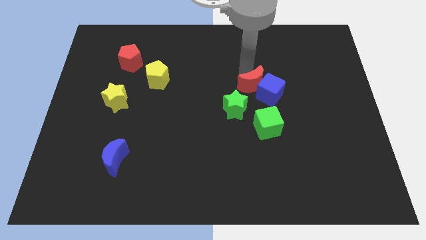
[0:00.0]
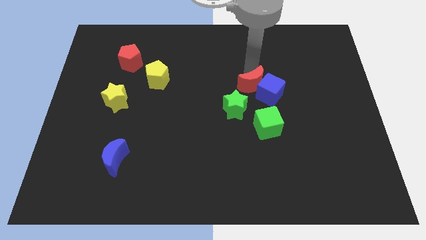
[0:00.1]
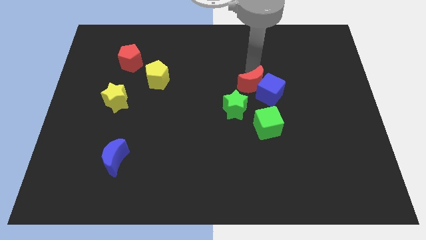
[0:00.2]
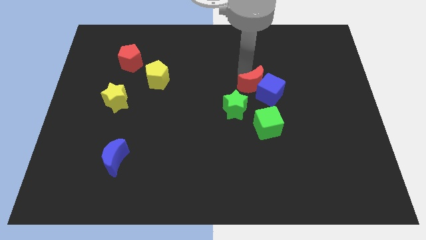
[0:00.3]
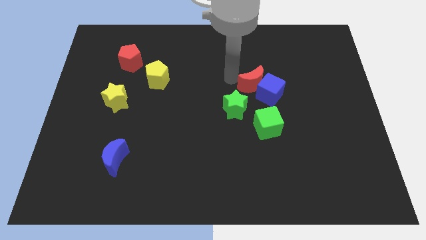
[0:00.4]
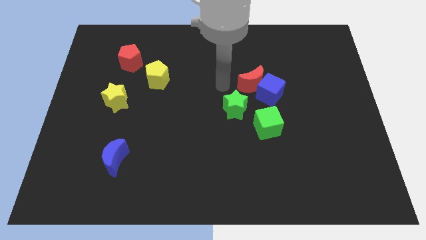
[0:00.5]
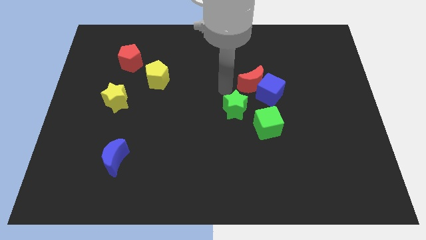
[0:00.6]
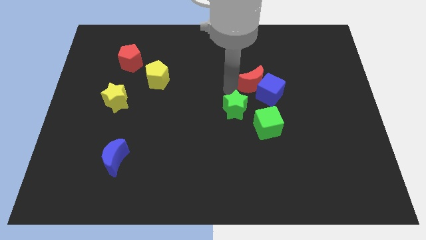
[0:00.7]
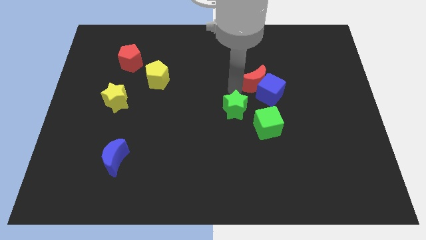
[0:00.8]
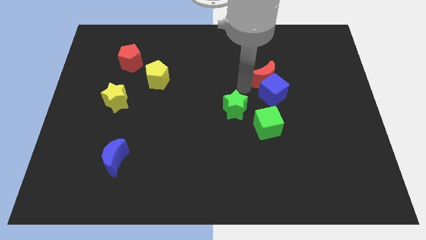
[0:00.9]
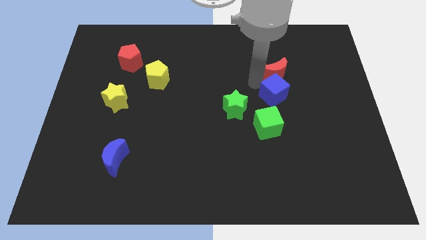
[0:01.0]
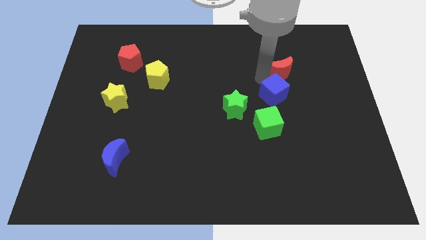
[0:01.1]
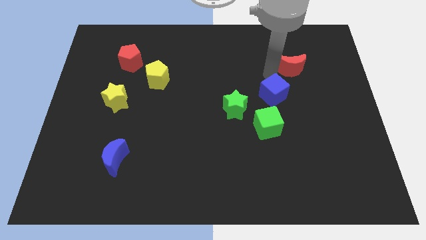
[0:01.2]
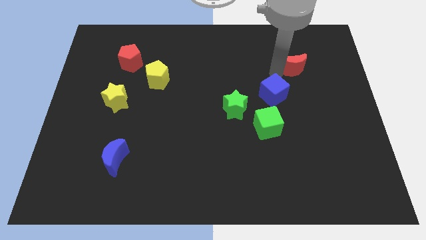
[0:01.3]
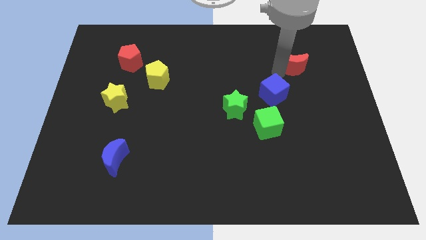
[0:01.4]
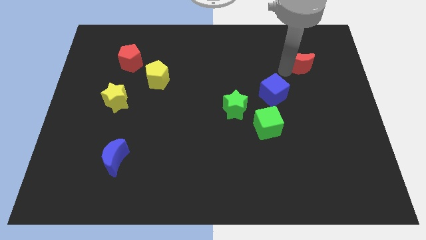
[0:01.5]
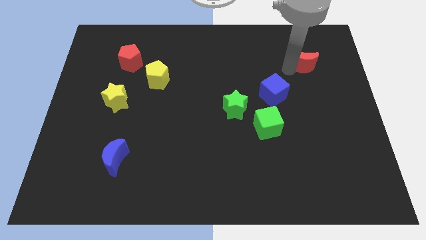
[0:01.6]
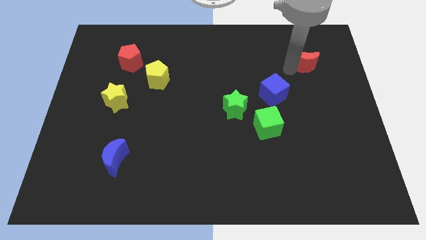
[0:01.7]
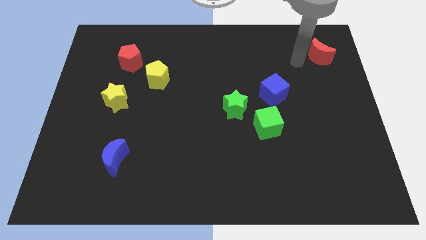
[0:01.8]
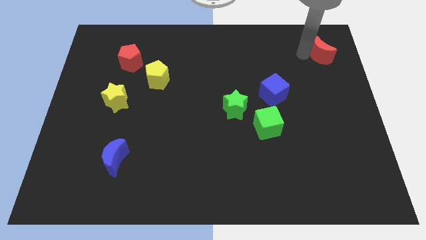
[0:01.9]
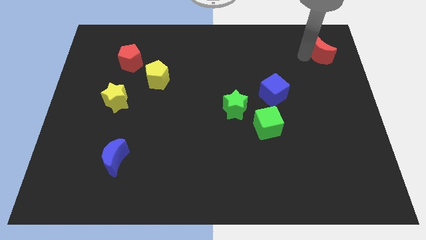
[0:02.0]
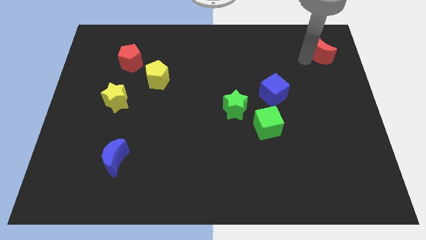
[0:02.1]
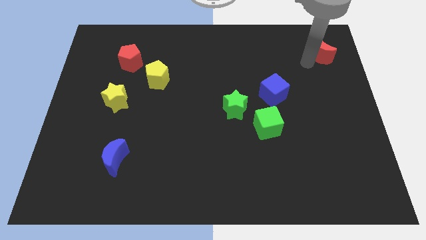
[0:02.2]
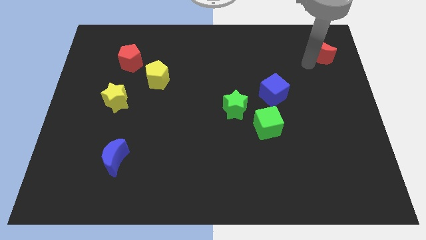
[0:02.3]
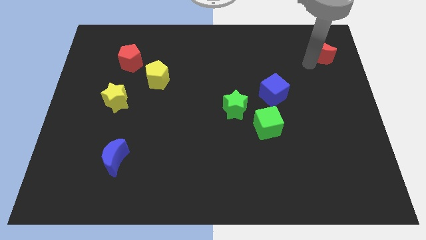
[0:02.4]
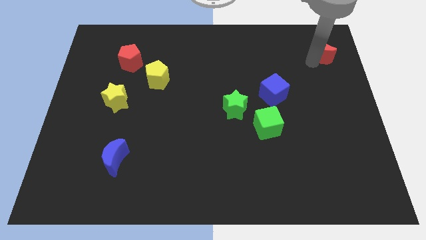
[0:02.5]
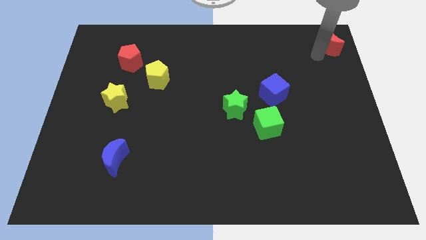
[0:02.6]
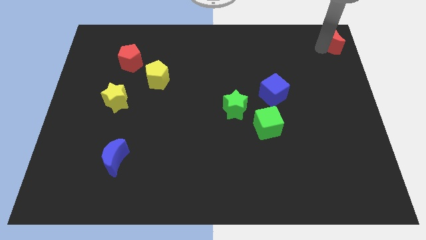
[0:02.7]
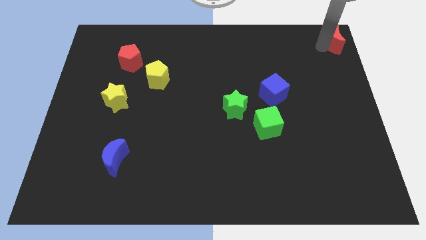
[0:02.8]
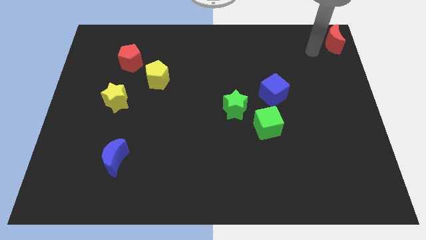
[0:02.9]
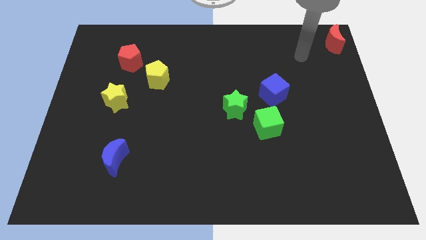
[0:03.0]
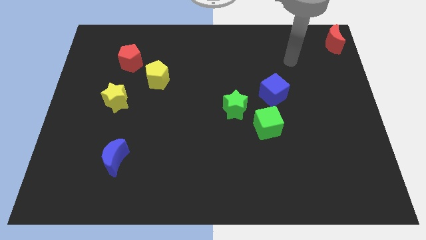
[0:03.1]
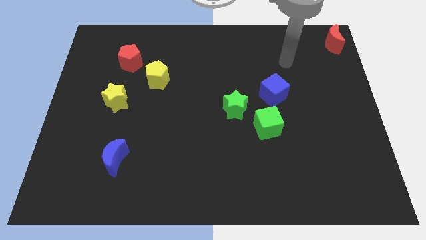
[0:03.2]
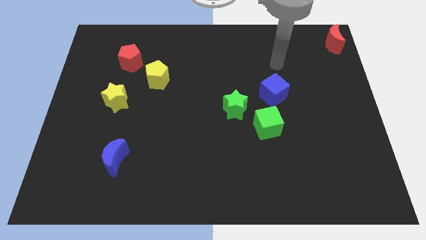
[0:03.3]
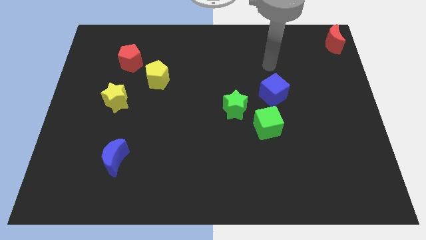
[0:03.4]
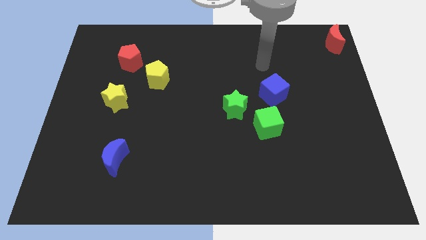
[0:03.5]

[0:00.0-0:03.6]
push the red crescent to the top right corner

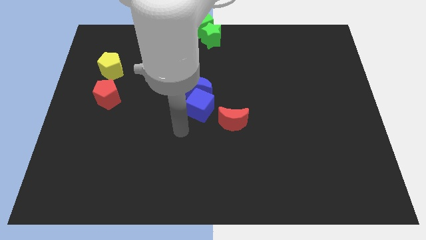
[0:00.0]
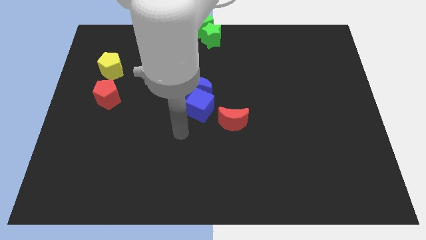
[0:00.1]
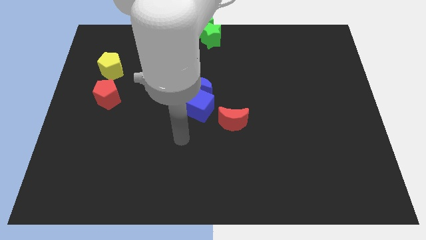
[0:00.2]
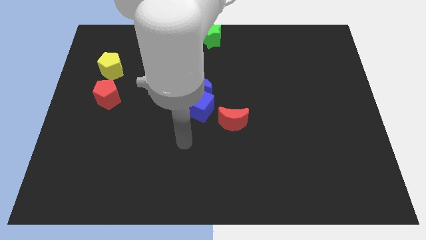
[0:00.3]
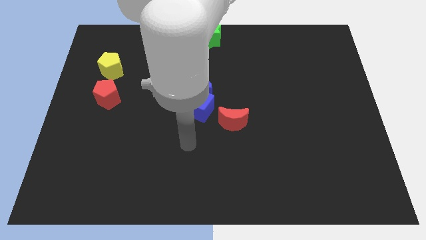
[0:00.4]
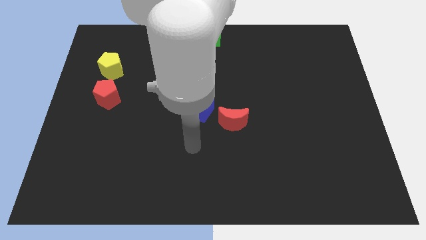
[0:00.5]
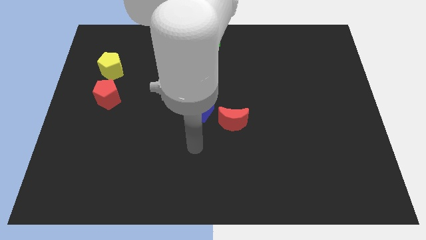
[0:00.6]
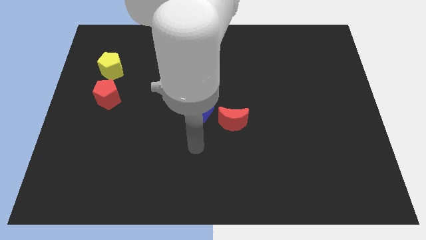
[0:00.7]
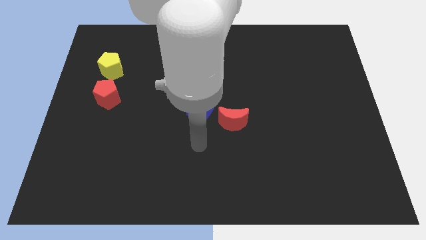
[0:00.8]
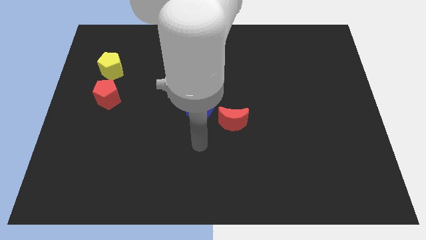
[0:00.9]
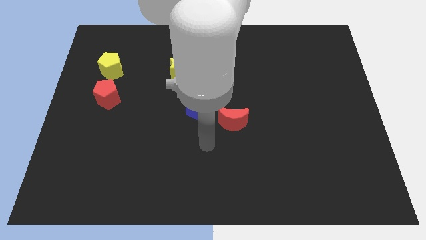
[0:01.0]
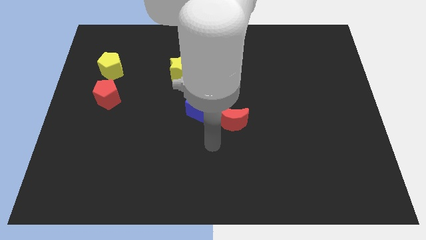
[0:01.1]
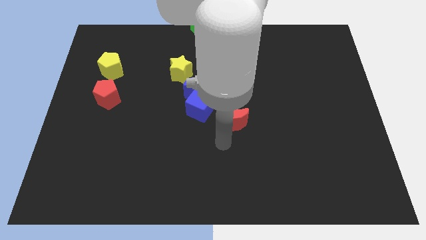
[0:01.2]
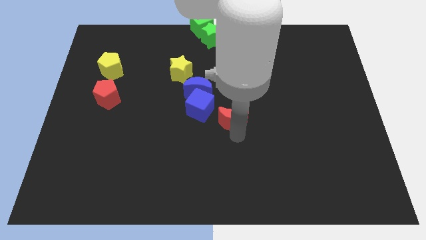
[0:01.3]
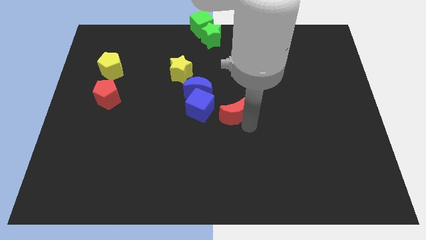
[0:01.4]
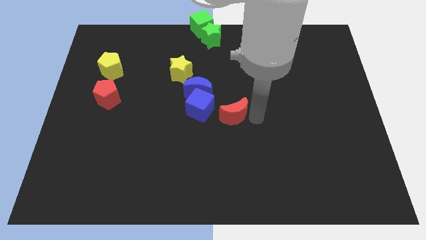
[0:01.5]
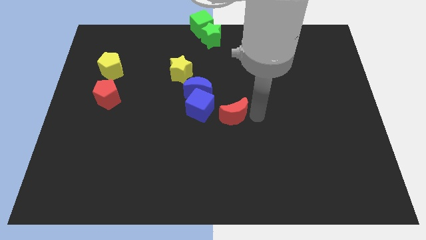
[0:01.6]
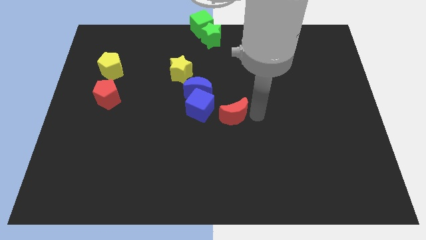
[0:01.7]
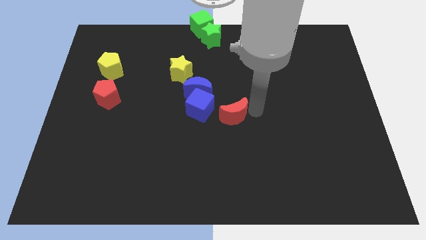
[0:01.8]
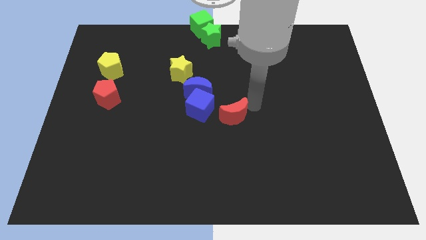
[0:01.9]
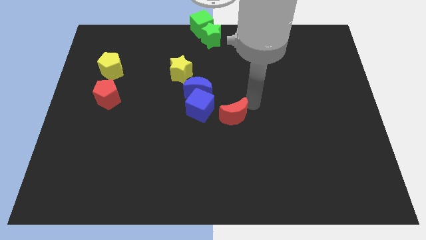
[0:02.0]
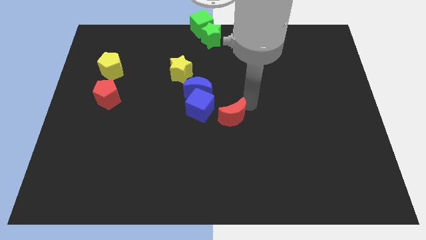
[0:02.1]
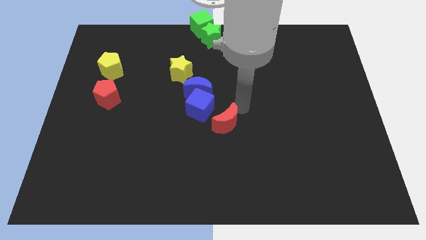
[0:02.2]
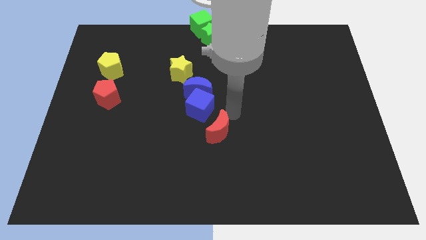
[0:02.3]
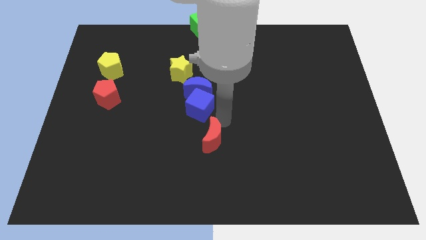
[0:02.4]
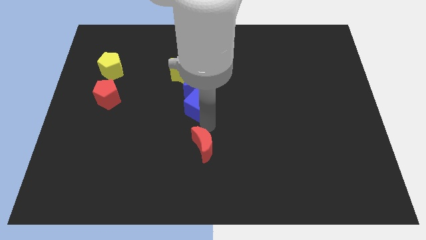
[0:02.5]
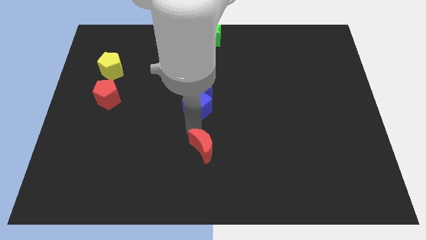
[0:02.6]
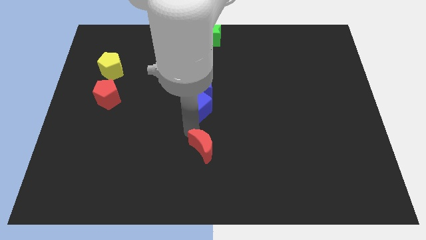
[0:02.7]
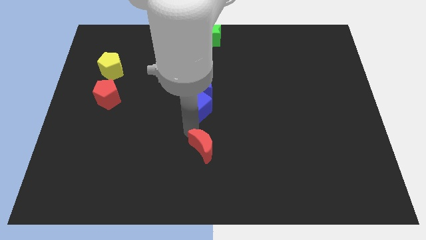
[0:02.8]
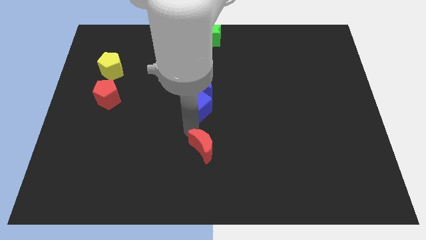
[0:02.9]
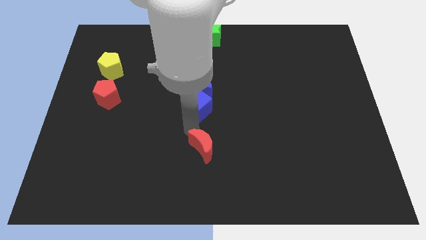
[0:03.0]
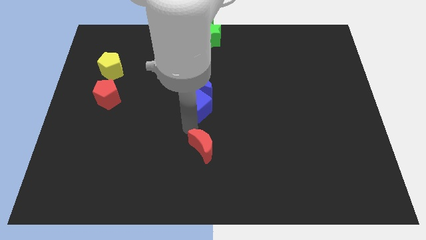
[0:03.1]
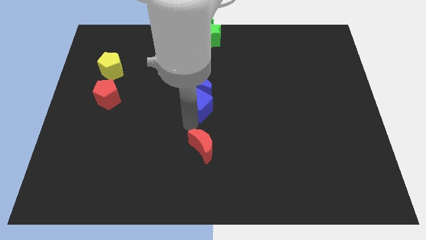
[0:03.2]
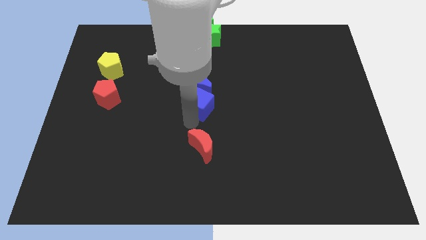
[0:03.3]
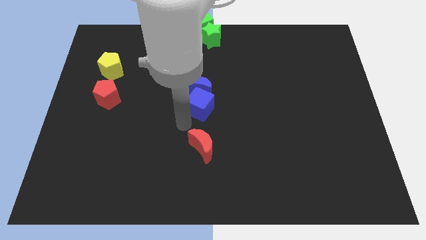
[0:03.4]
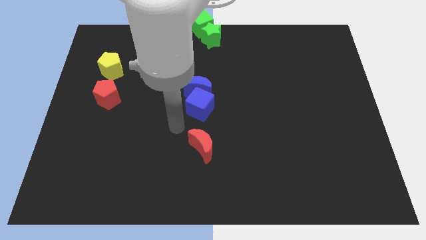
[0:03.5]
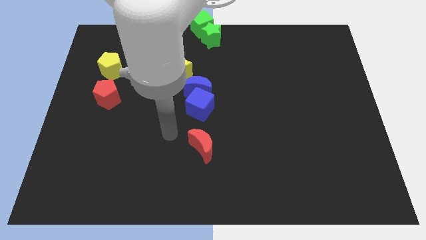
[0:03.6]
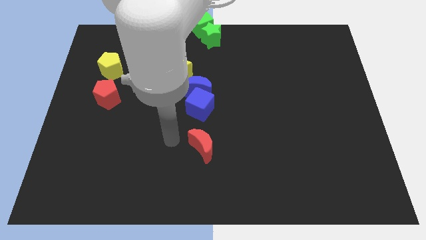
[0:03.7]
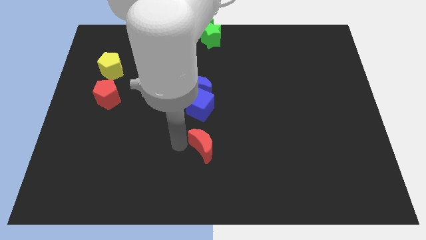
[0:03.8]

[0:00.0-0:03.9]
move the red moon below the blue cube

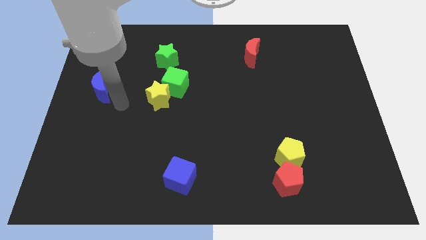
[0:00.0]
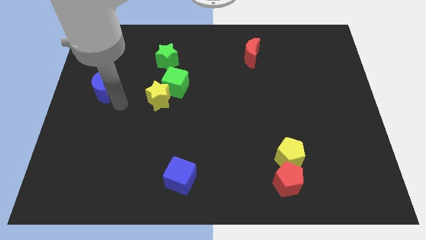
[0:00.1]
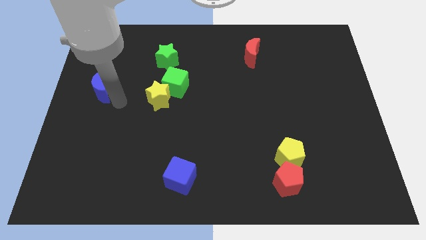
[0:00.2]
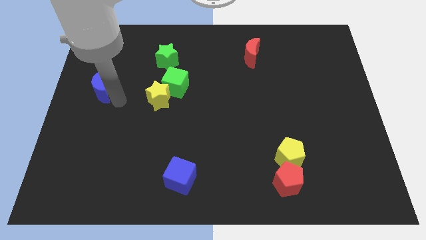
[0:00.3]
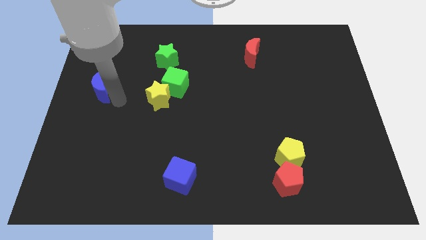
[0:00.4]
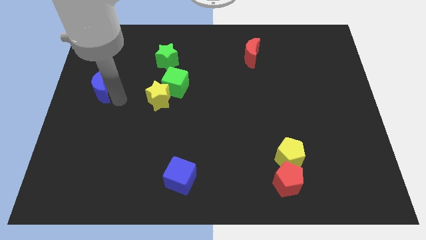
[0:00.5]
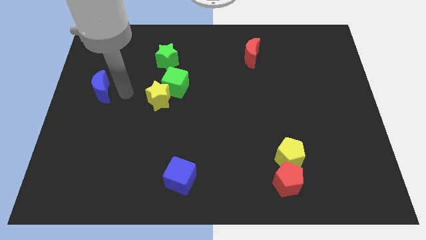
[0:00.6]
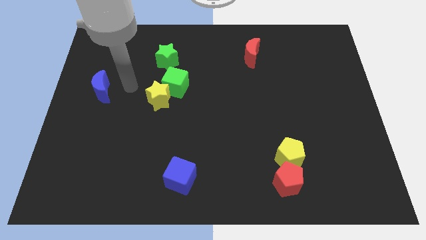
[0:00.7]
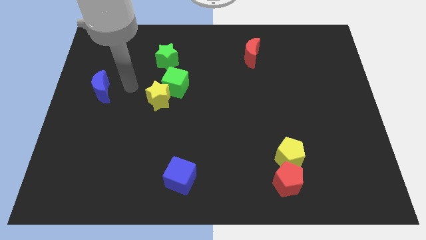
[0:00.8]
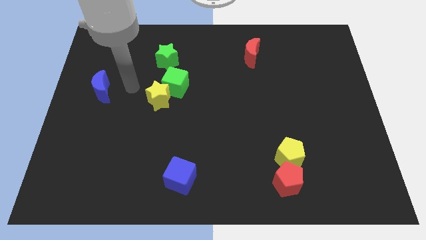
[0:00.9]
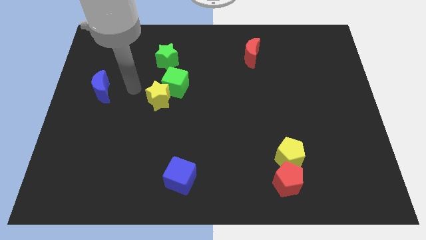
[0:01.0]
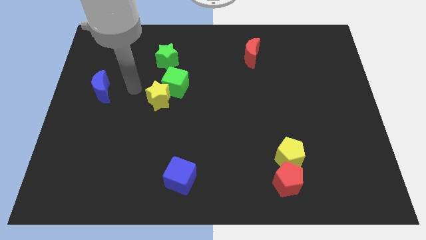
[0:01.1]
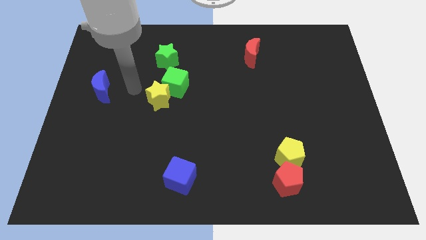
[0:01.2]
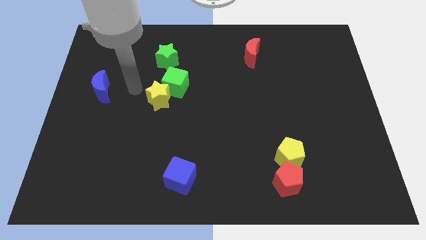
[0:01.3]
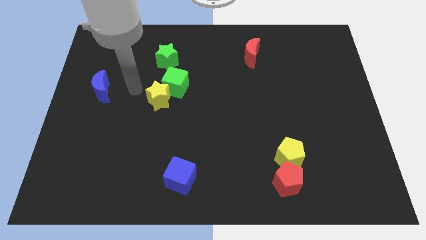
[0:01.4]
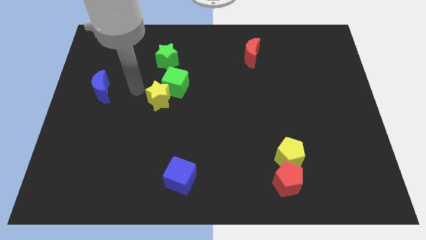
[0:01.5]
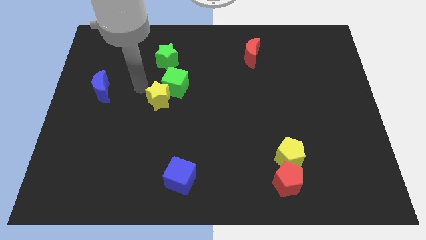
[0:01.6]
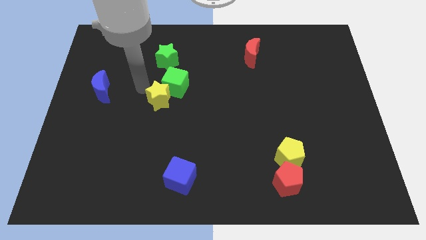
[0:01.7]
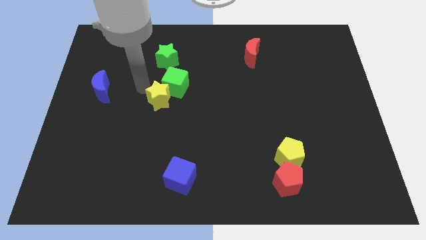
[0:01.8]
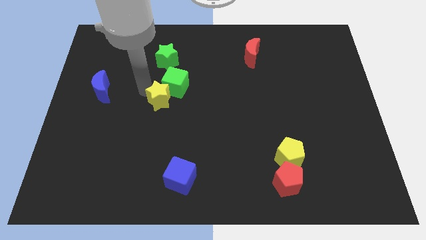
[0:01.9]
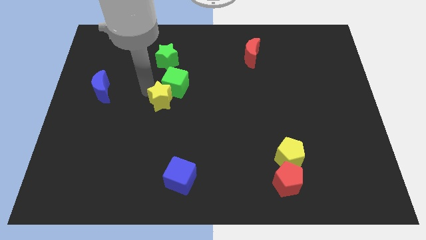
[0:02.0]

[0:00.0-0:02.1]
tap the yellow star
